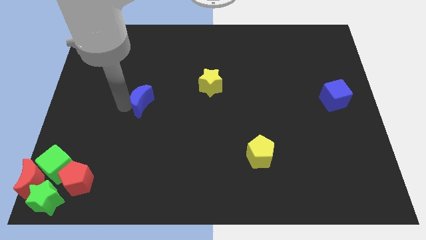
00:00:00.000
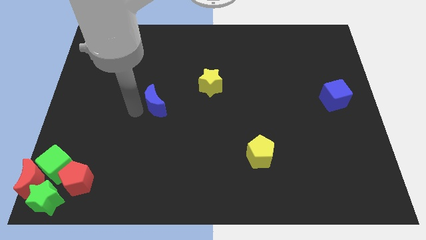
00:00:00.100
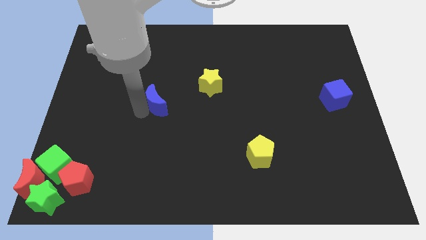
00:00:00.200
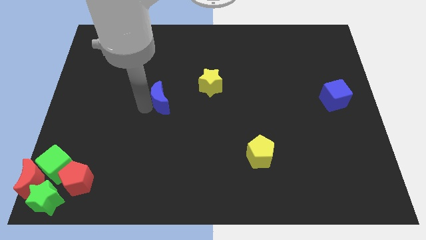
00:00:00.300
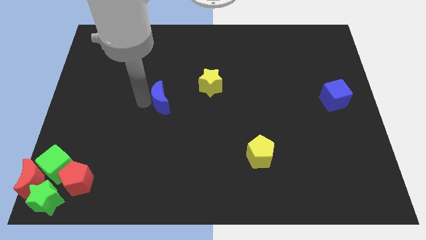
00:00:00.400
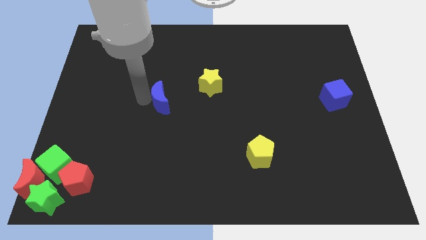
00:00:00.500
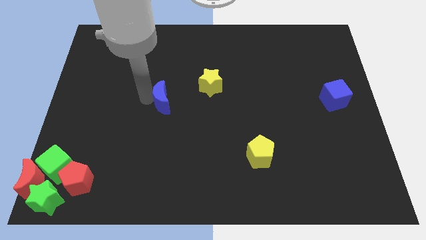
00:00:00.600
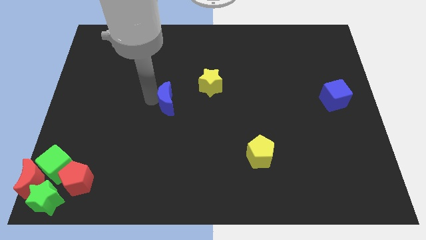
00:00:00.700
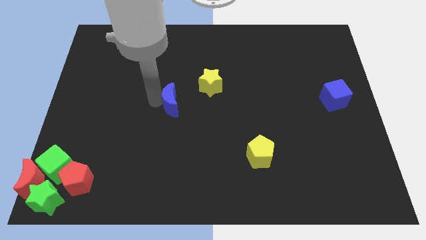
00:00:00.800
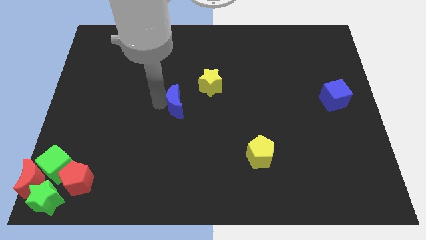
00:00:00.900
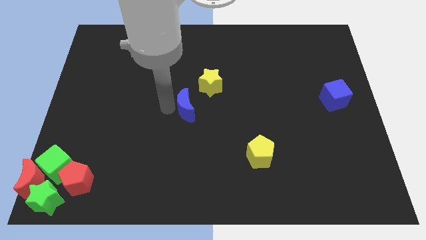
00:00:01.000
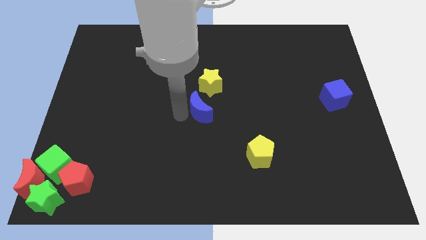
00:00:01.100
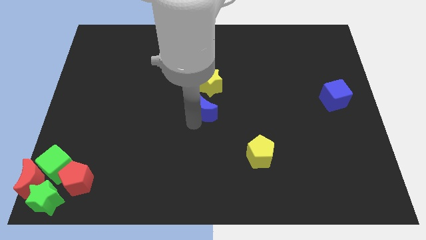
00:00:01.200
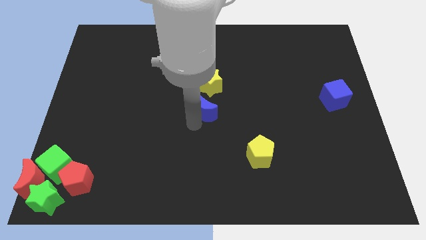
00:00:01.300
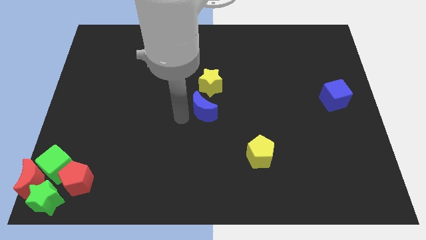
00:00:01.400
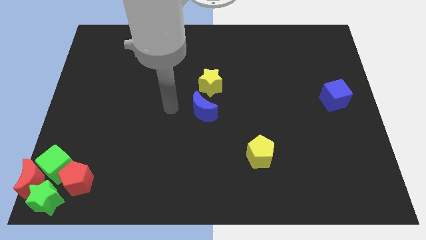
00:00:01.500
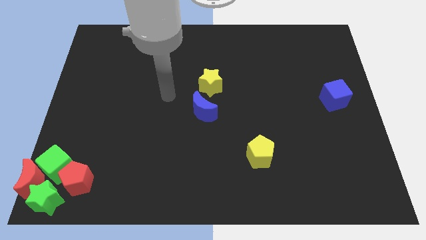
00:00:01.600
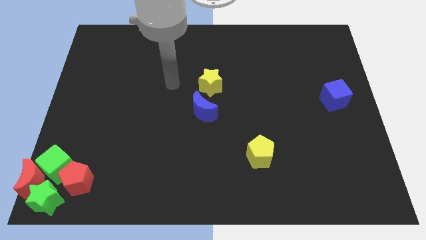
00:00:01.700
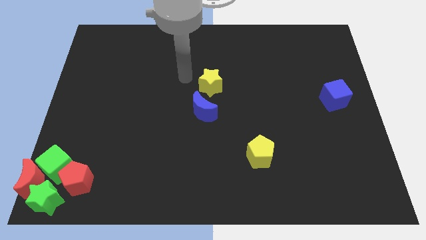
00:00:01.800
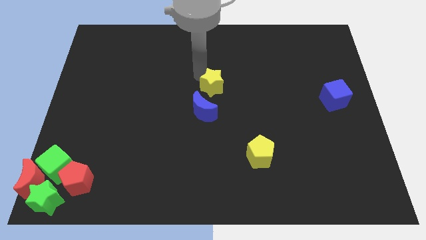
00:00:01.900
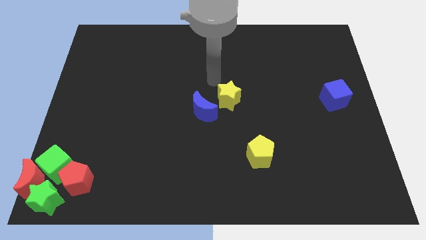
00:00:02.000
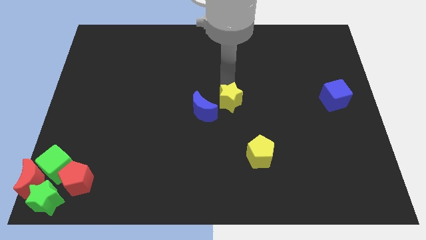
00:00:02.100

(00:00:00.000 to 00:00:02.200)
push blue moon below to the yellow star

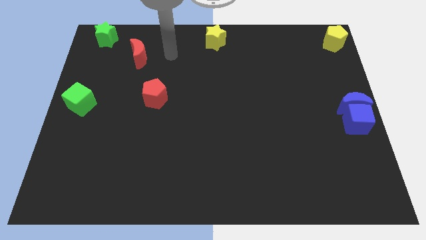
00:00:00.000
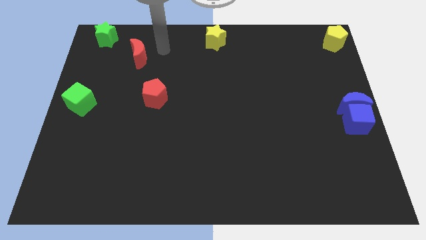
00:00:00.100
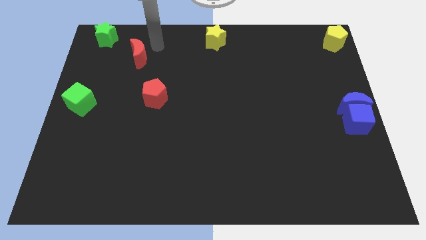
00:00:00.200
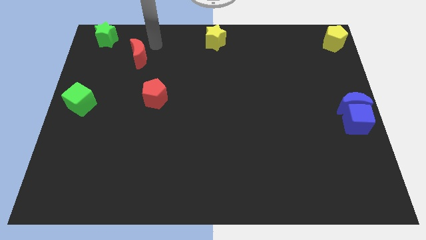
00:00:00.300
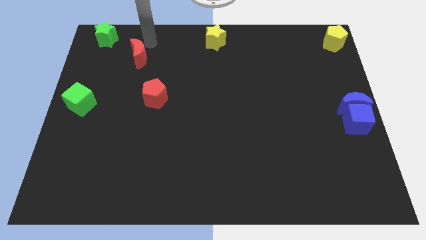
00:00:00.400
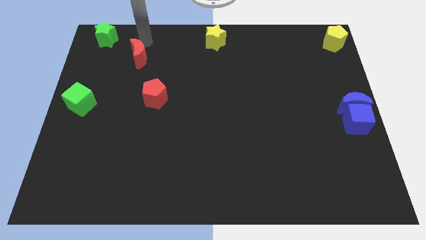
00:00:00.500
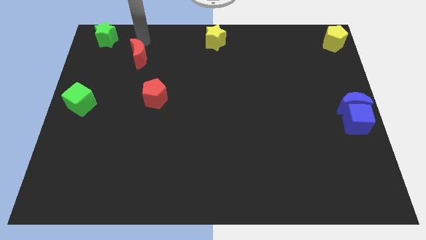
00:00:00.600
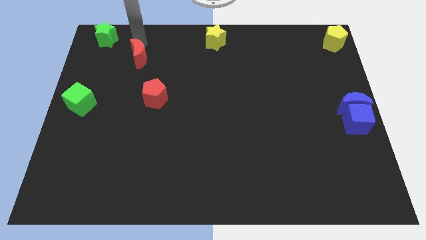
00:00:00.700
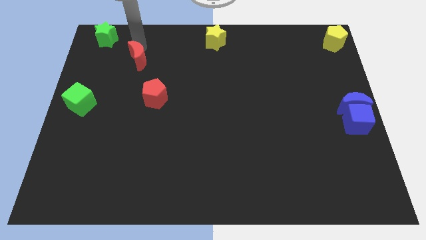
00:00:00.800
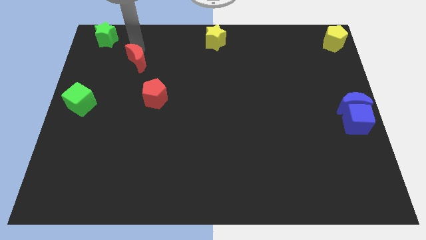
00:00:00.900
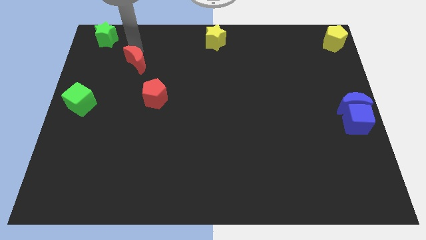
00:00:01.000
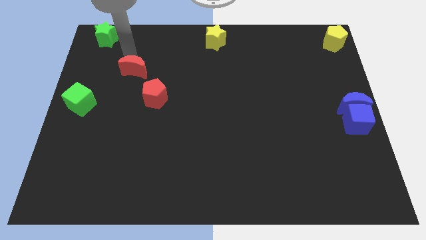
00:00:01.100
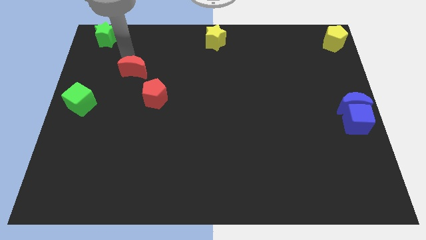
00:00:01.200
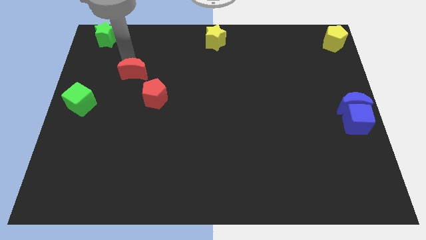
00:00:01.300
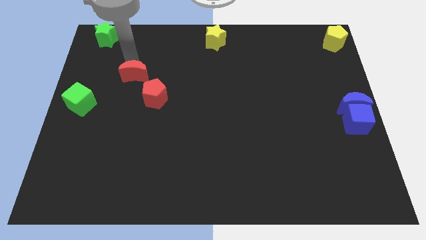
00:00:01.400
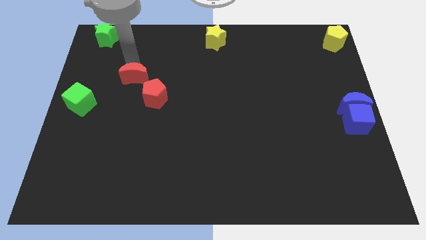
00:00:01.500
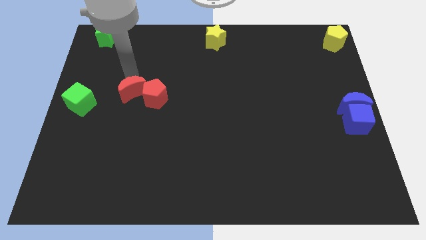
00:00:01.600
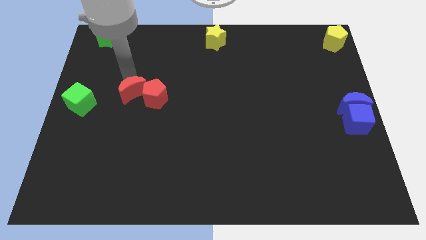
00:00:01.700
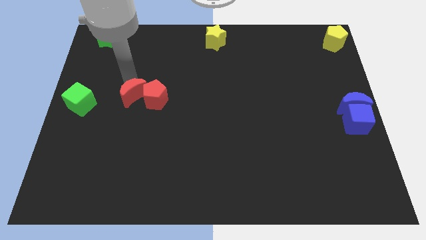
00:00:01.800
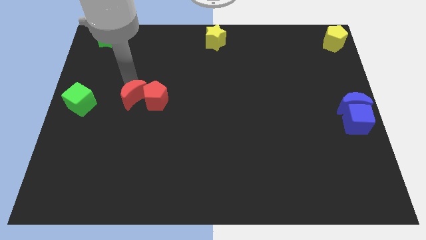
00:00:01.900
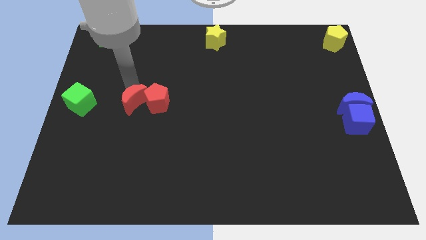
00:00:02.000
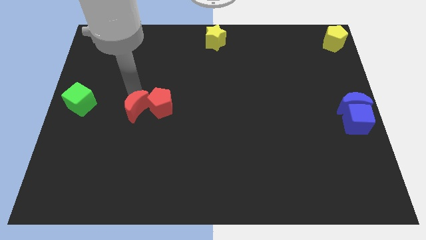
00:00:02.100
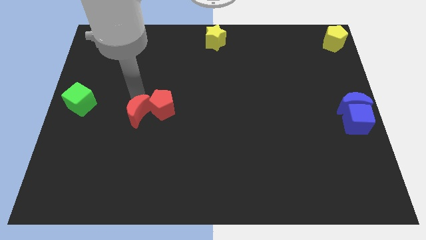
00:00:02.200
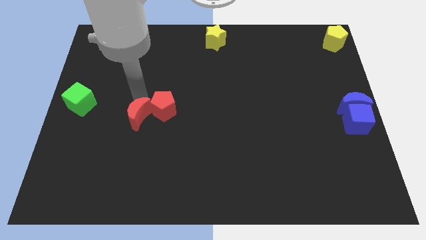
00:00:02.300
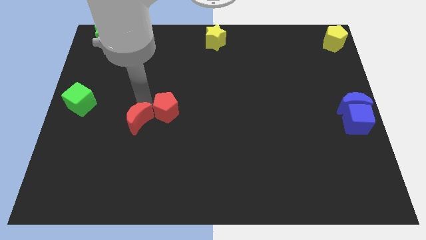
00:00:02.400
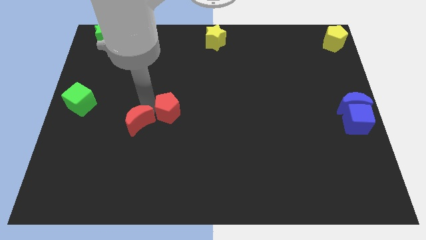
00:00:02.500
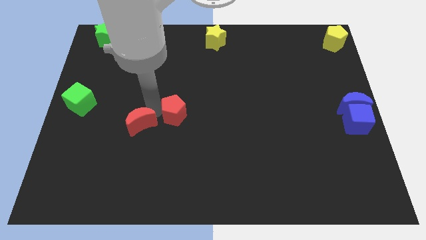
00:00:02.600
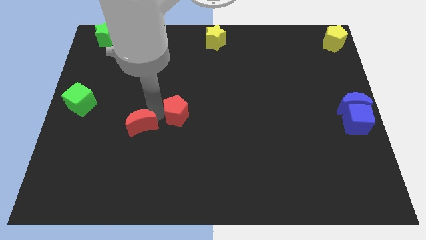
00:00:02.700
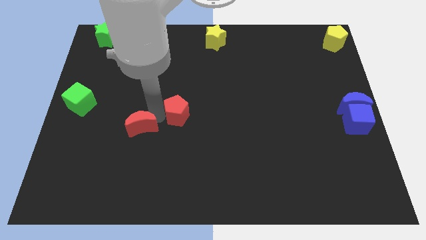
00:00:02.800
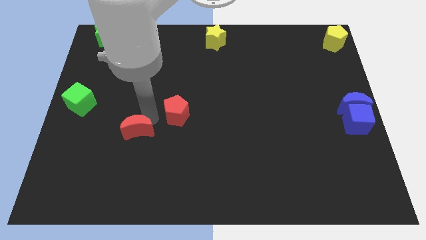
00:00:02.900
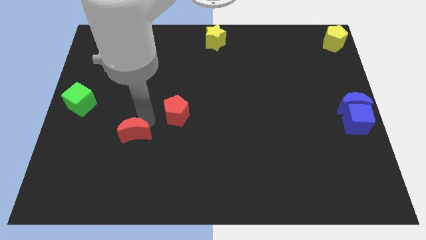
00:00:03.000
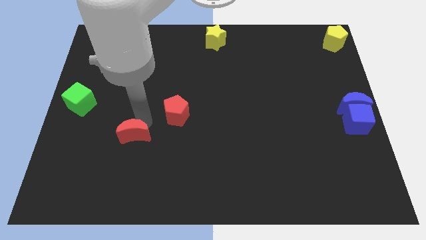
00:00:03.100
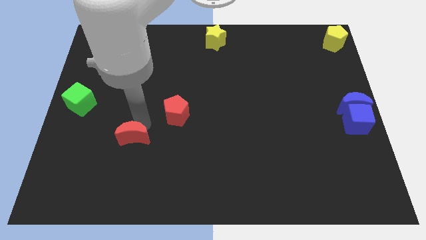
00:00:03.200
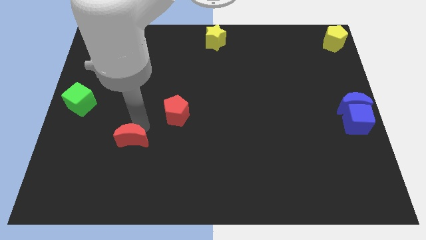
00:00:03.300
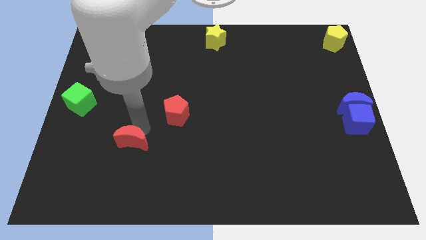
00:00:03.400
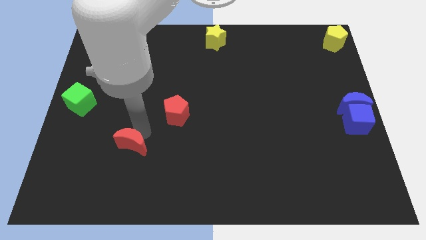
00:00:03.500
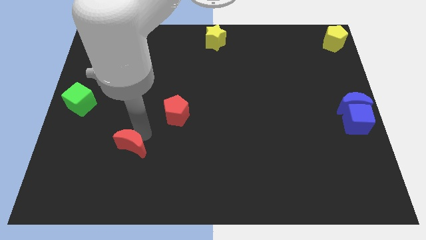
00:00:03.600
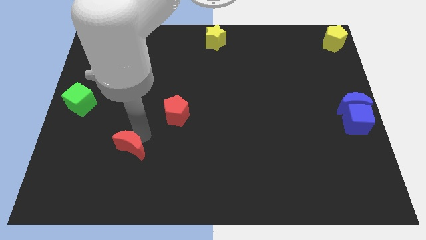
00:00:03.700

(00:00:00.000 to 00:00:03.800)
push the red crescent to the bottom

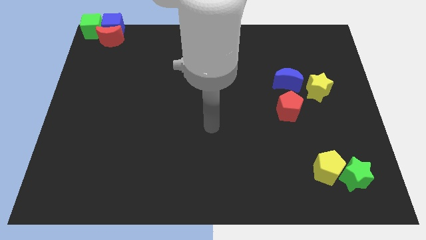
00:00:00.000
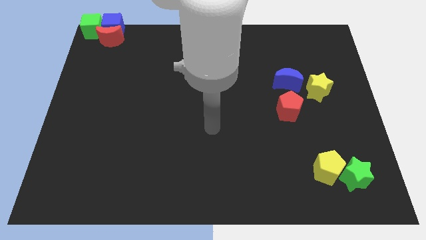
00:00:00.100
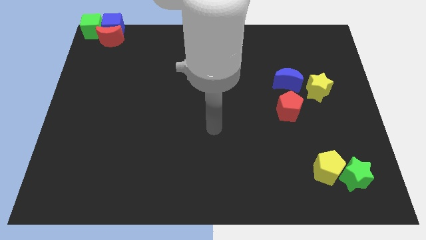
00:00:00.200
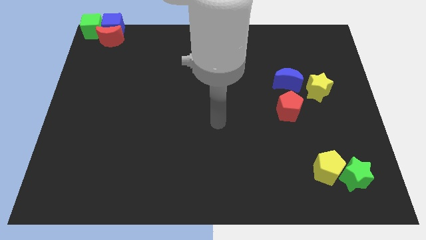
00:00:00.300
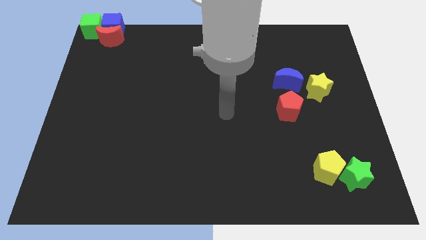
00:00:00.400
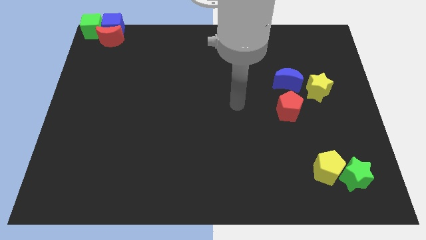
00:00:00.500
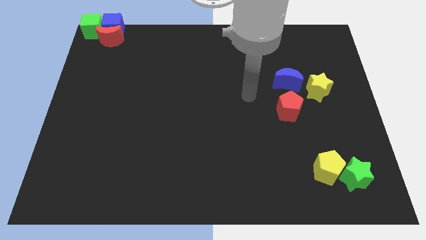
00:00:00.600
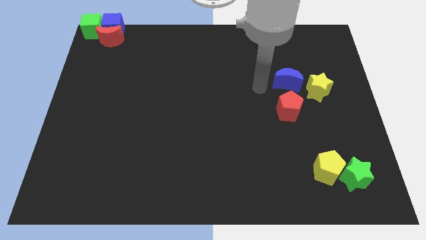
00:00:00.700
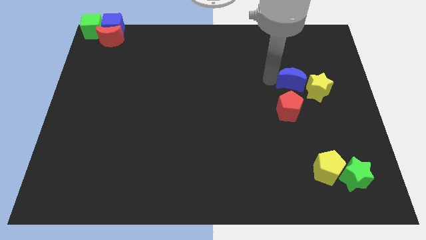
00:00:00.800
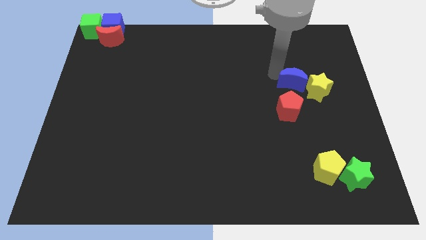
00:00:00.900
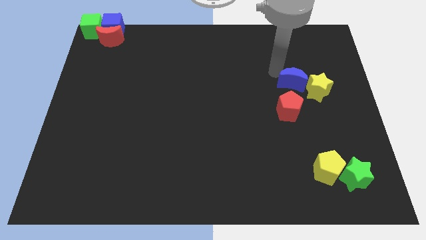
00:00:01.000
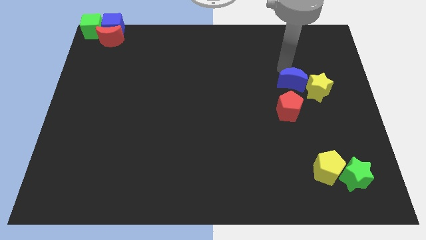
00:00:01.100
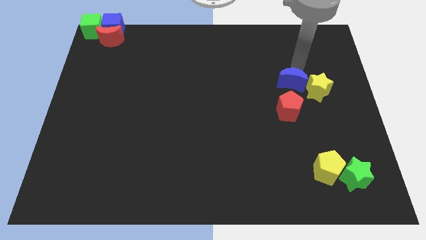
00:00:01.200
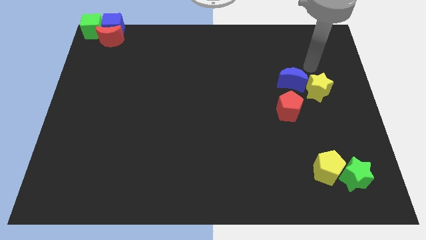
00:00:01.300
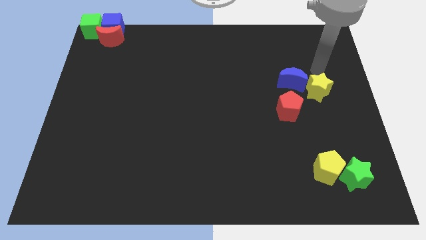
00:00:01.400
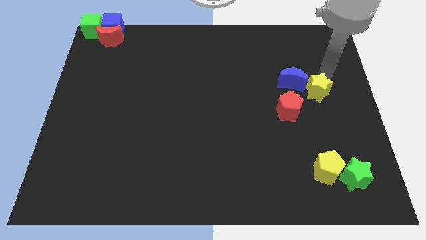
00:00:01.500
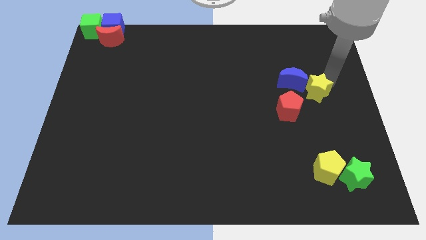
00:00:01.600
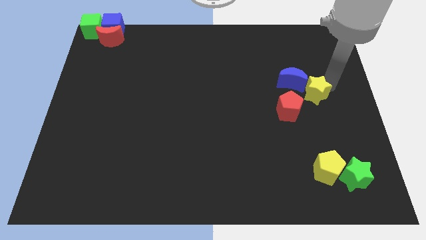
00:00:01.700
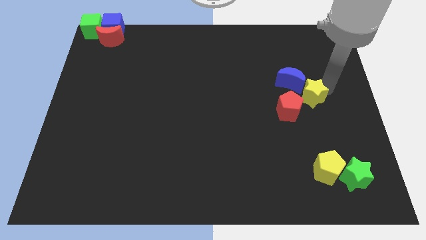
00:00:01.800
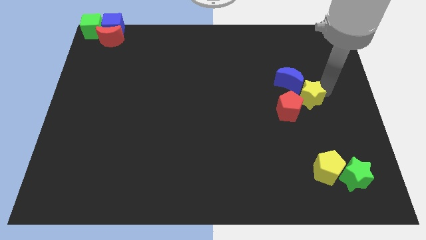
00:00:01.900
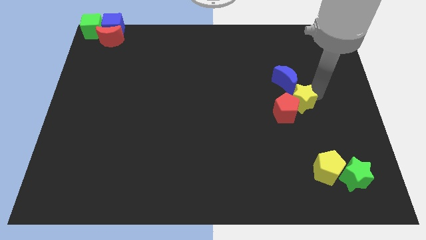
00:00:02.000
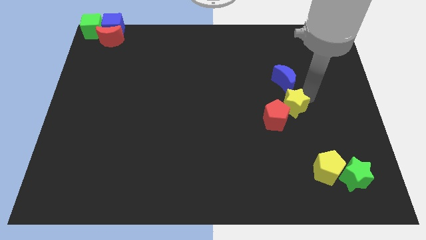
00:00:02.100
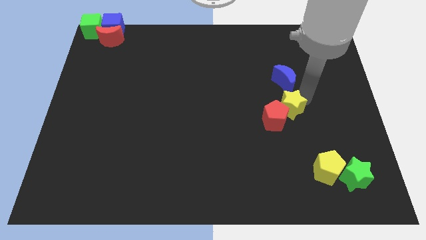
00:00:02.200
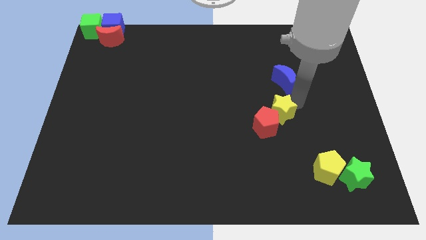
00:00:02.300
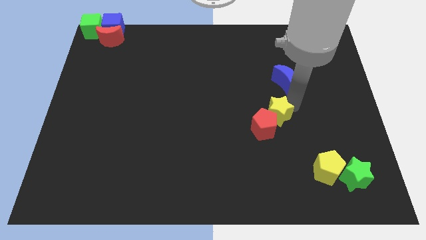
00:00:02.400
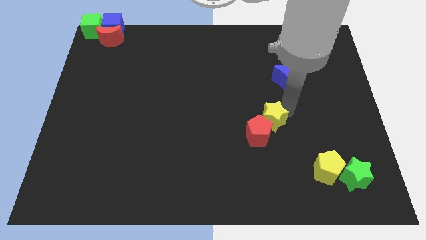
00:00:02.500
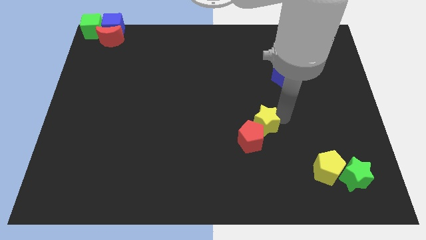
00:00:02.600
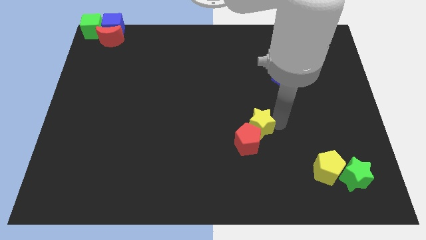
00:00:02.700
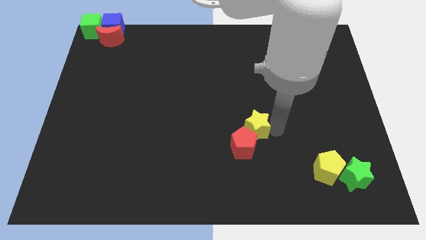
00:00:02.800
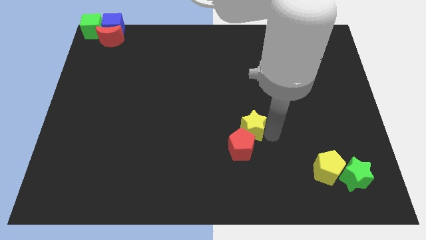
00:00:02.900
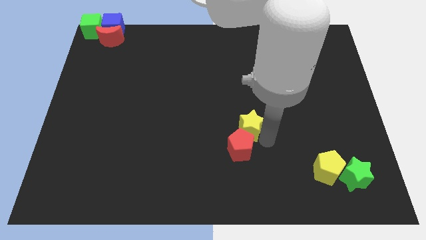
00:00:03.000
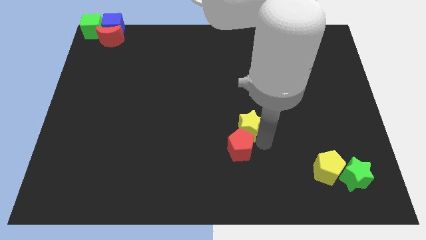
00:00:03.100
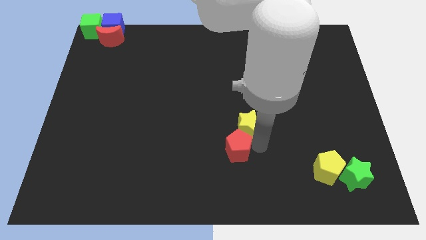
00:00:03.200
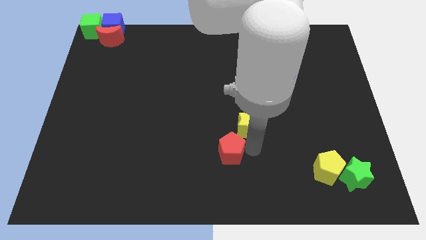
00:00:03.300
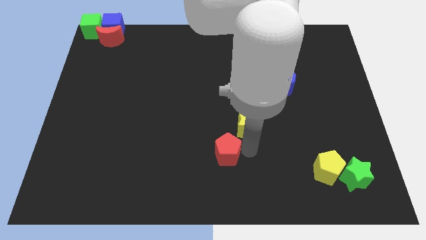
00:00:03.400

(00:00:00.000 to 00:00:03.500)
push the yellow star along with red pentagon towards bottom
